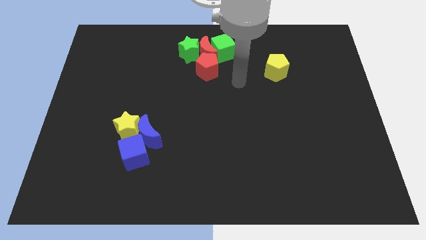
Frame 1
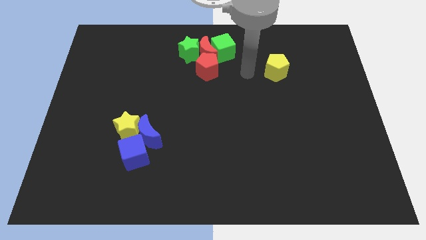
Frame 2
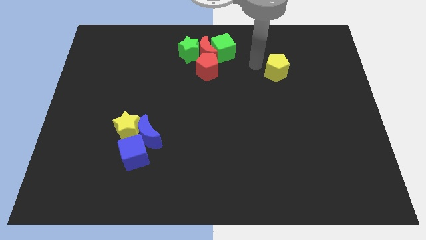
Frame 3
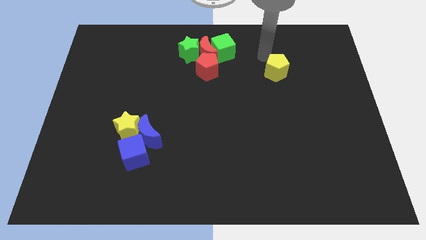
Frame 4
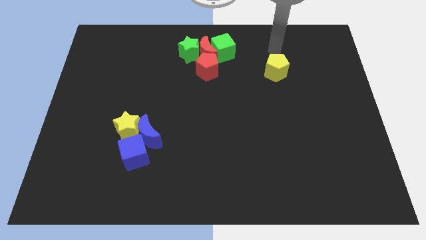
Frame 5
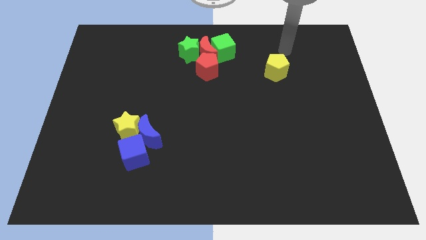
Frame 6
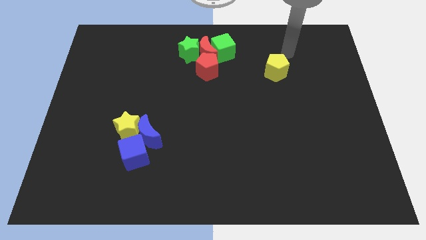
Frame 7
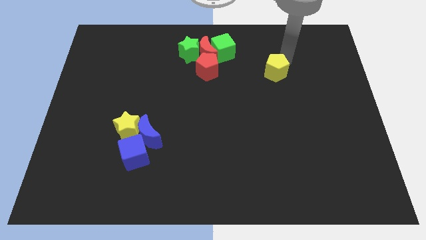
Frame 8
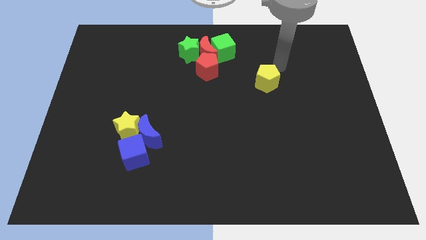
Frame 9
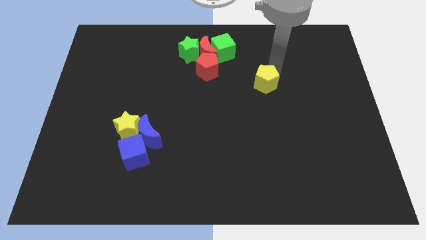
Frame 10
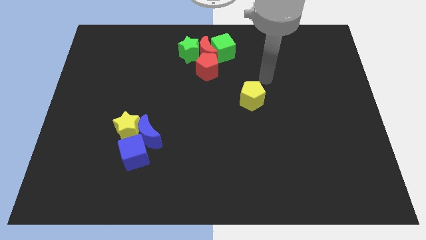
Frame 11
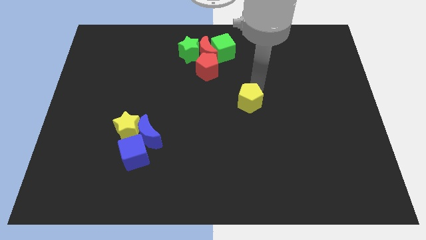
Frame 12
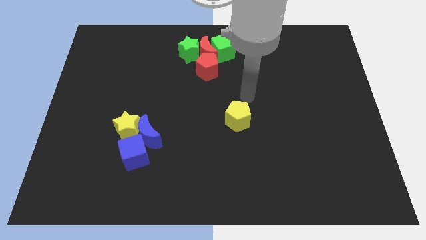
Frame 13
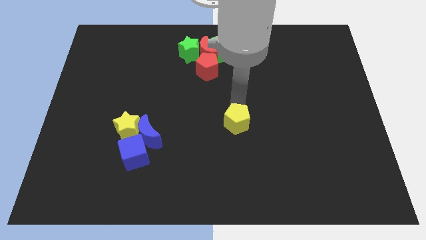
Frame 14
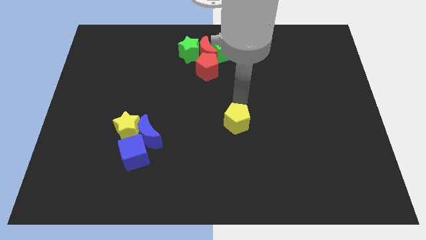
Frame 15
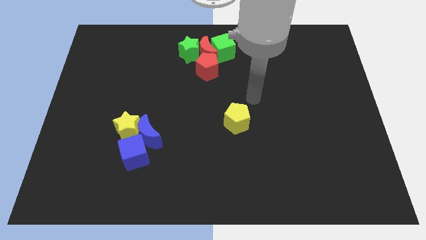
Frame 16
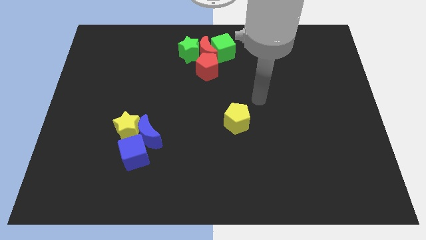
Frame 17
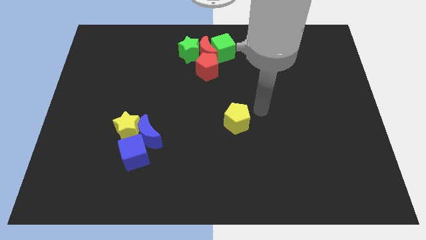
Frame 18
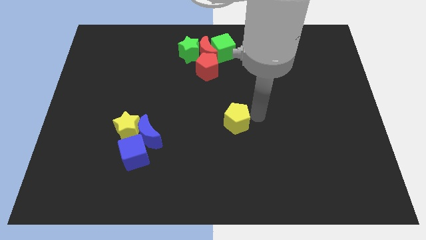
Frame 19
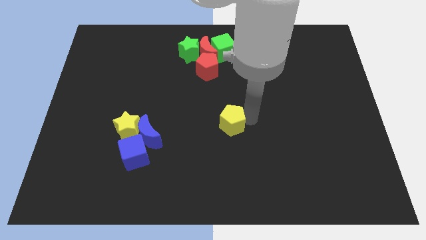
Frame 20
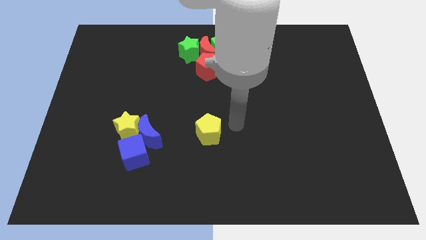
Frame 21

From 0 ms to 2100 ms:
move the yellow pentagon below the red pentagon at the center

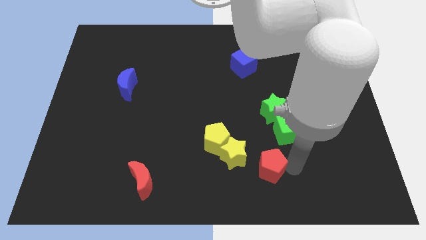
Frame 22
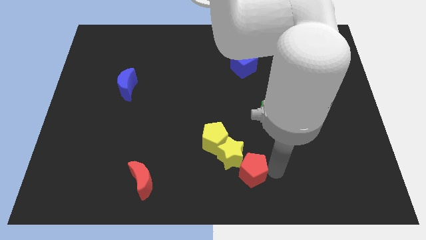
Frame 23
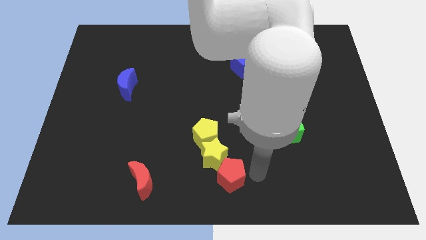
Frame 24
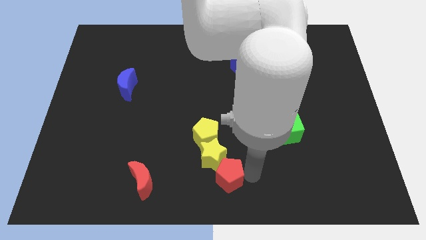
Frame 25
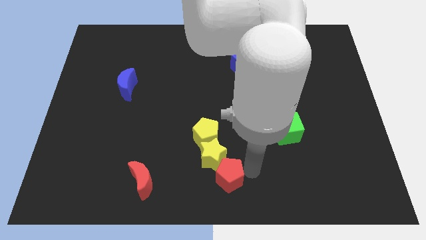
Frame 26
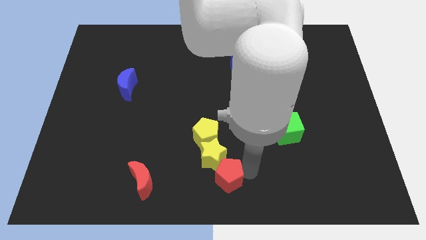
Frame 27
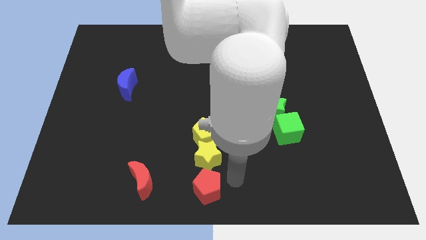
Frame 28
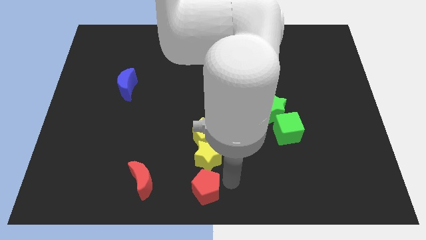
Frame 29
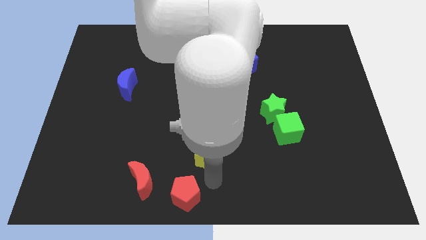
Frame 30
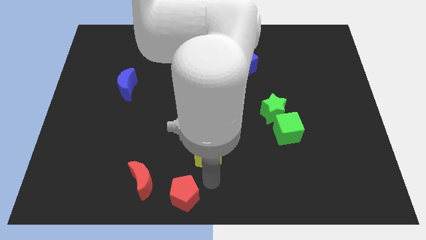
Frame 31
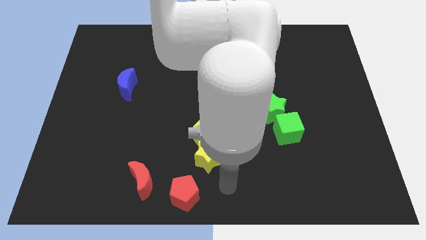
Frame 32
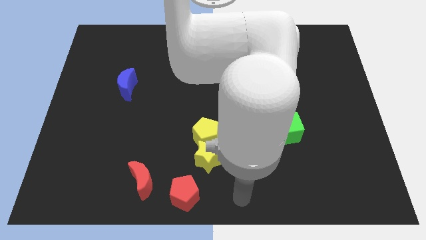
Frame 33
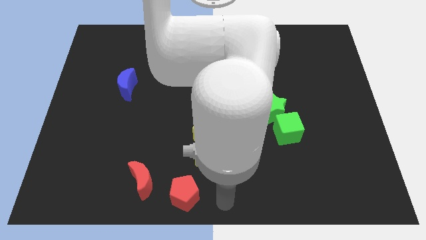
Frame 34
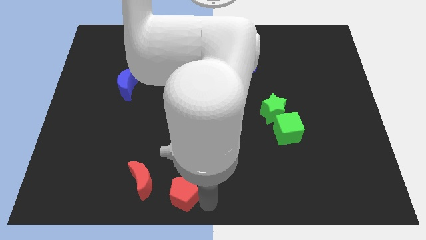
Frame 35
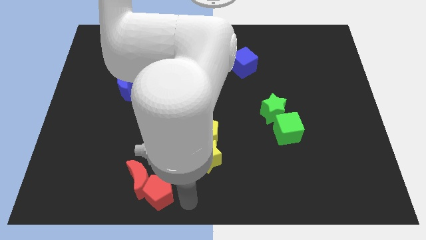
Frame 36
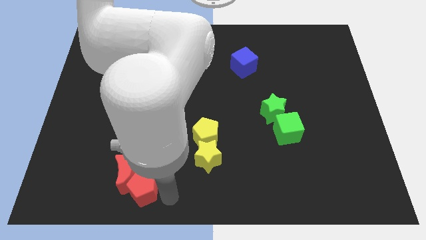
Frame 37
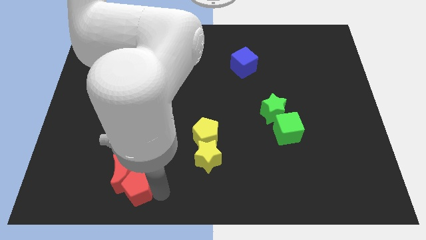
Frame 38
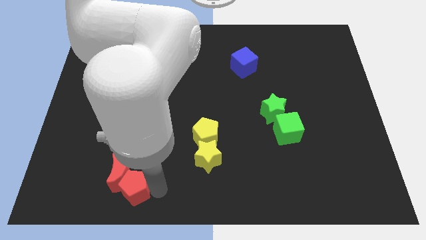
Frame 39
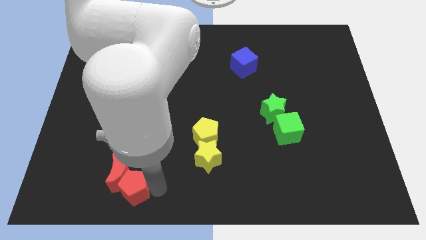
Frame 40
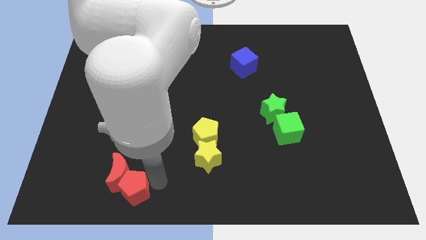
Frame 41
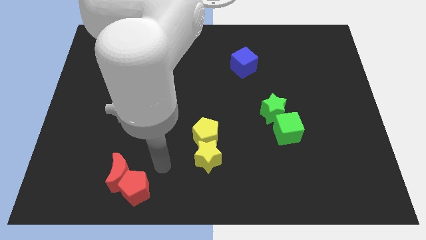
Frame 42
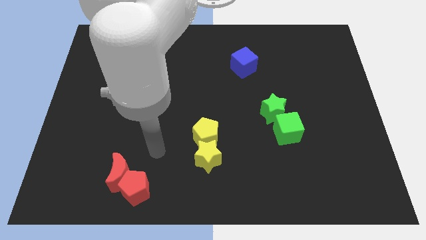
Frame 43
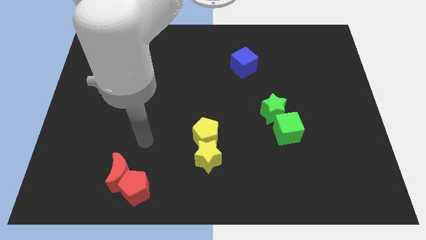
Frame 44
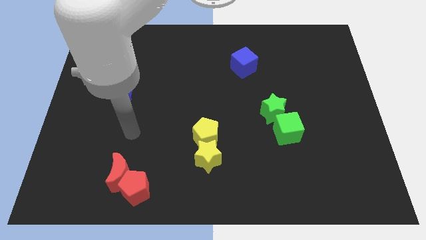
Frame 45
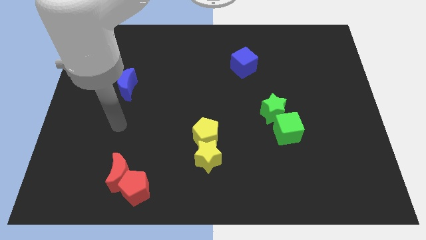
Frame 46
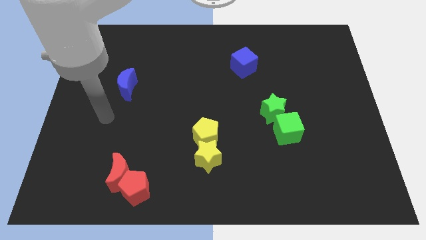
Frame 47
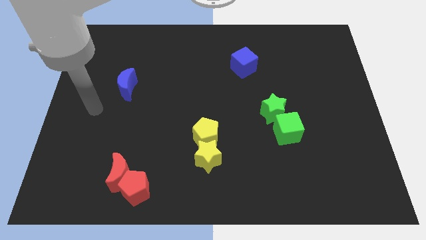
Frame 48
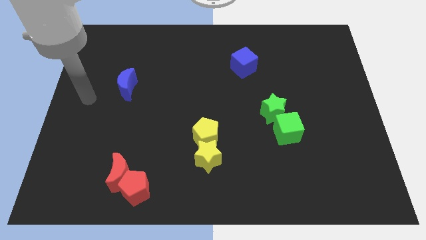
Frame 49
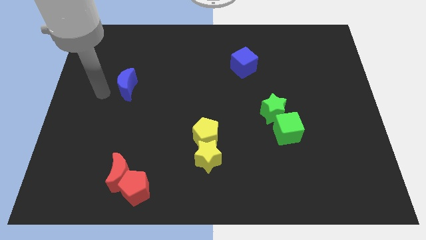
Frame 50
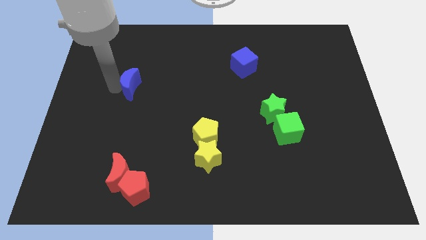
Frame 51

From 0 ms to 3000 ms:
push the red pentagon into red crescent

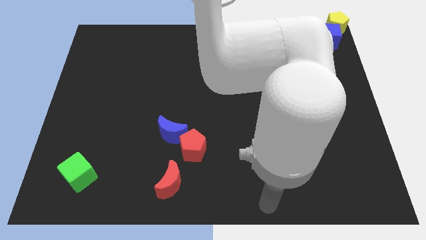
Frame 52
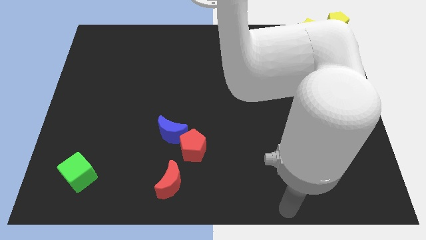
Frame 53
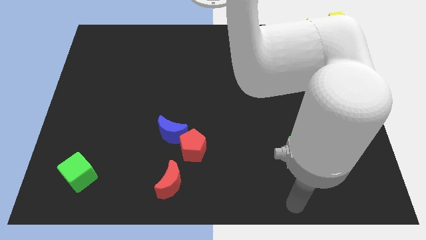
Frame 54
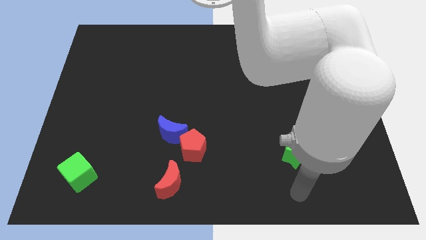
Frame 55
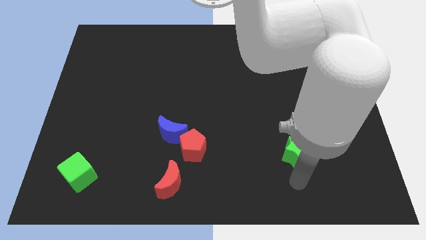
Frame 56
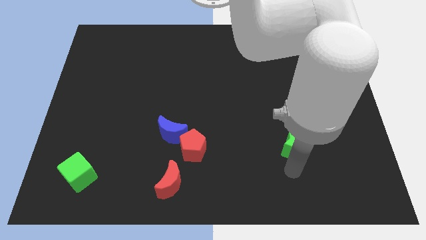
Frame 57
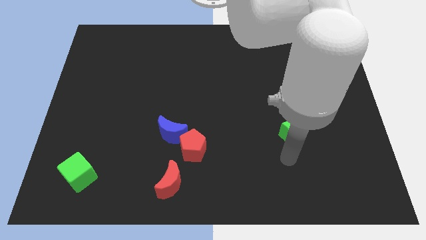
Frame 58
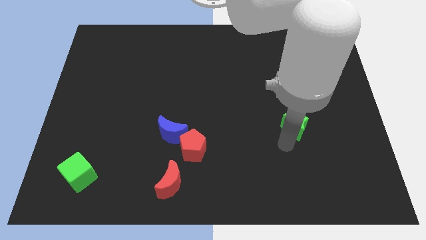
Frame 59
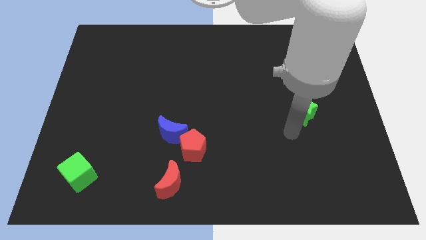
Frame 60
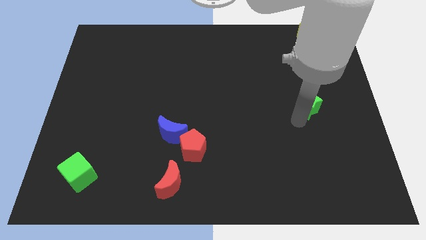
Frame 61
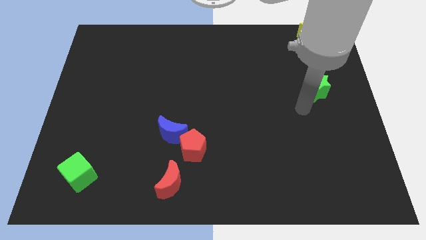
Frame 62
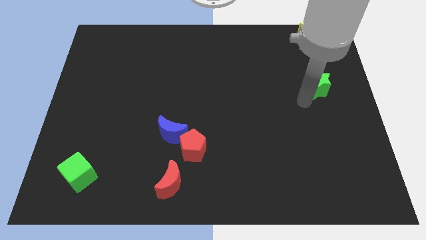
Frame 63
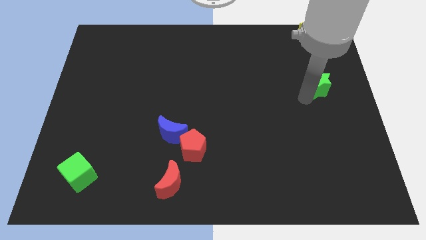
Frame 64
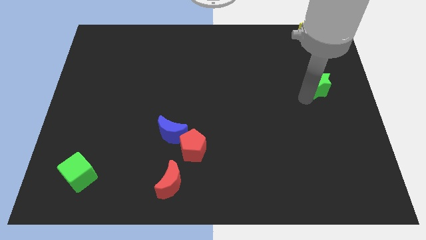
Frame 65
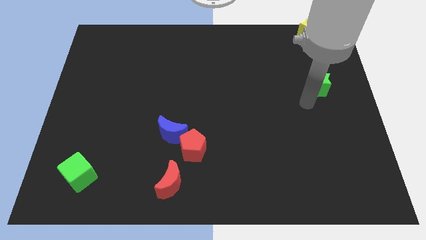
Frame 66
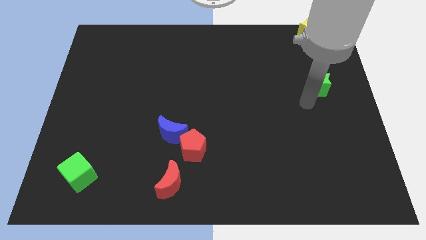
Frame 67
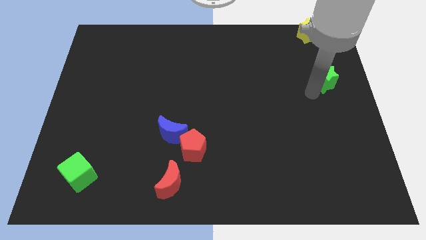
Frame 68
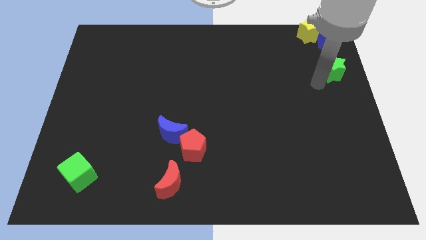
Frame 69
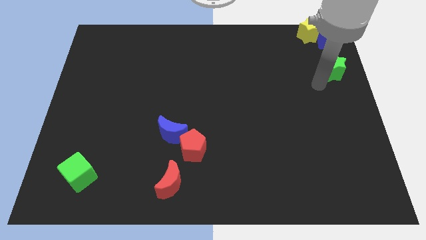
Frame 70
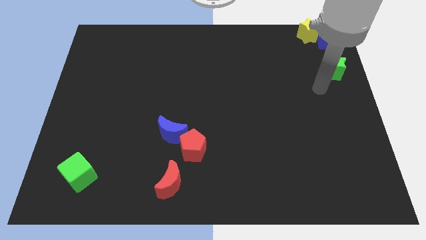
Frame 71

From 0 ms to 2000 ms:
place the green star below the blue cube

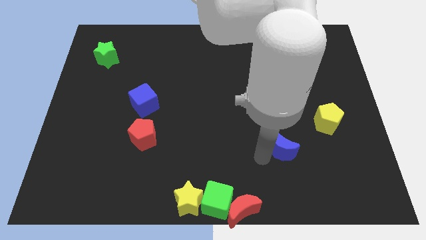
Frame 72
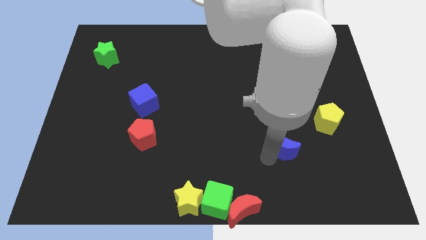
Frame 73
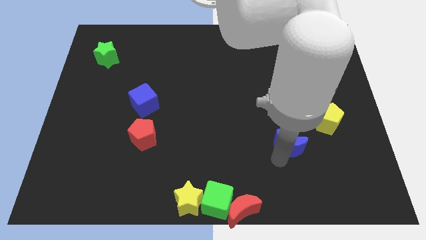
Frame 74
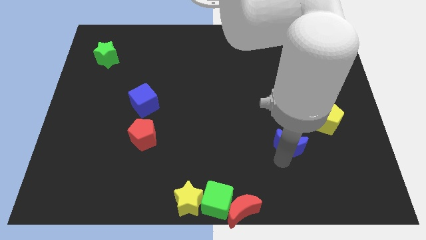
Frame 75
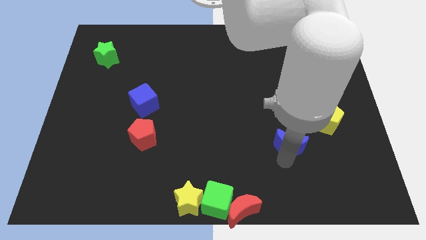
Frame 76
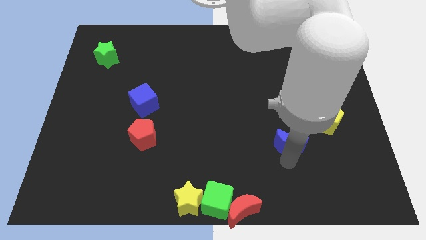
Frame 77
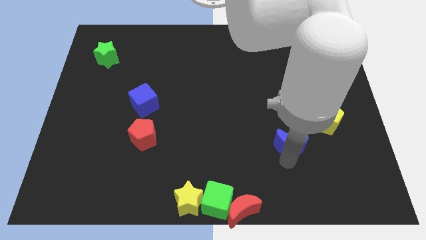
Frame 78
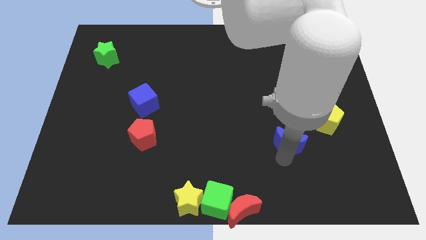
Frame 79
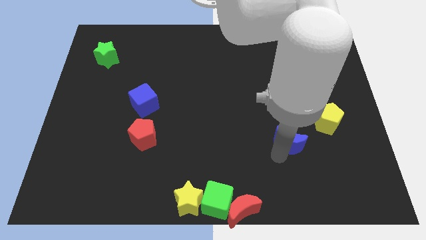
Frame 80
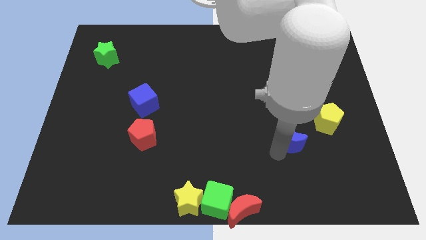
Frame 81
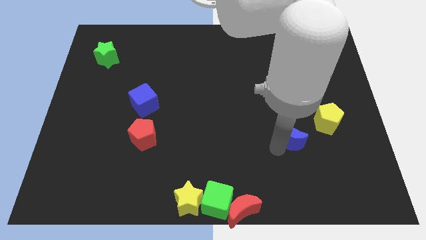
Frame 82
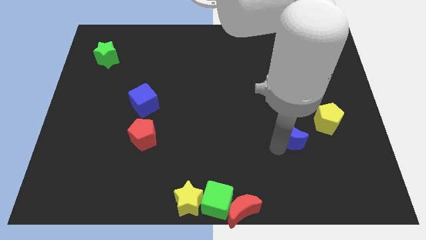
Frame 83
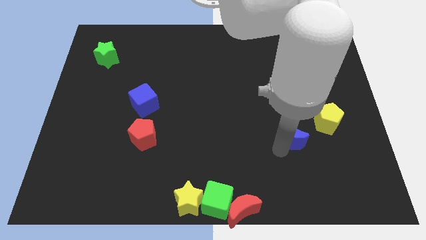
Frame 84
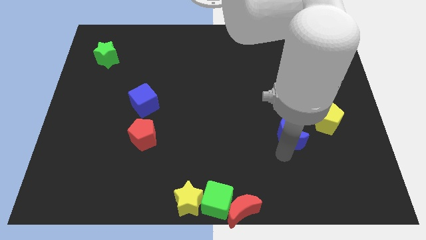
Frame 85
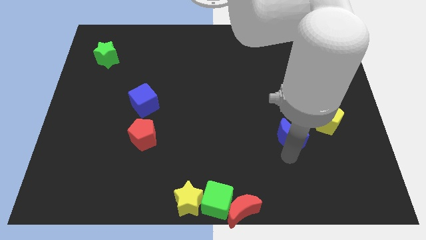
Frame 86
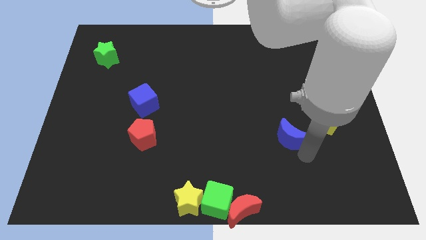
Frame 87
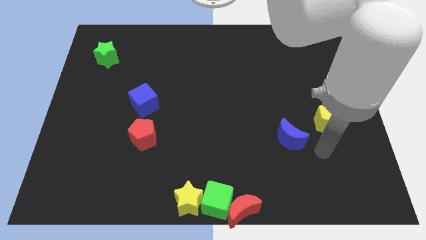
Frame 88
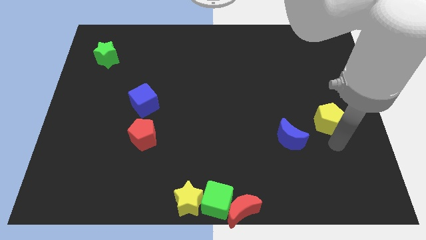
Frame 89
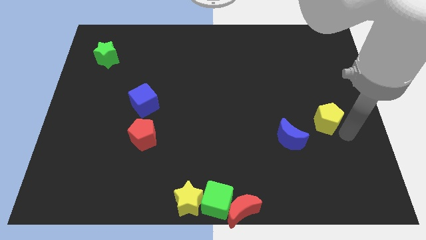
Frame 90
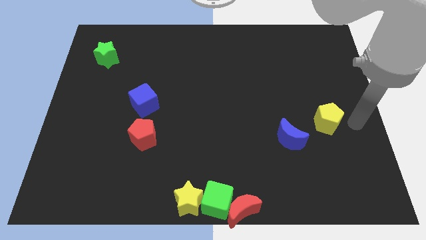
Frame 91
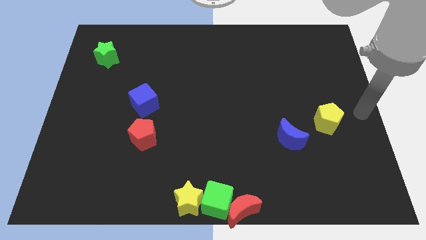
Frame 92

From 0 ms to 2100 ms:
slightly move the blue moon towards the yellow pentagon
